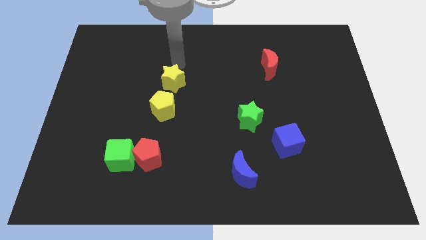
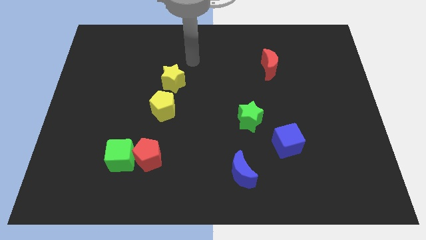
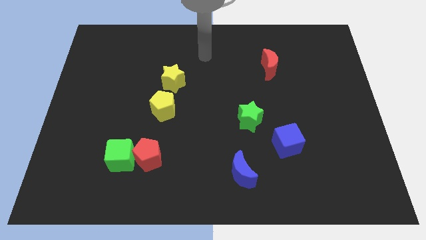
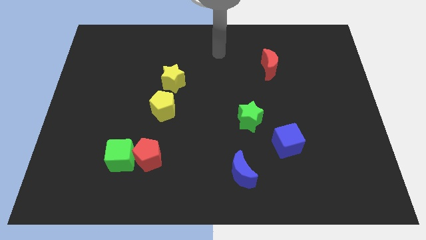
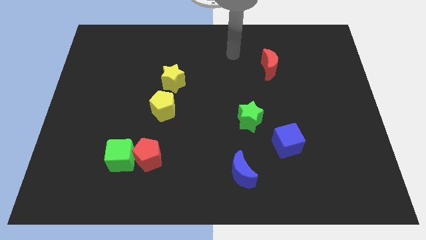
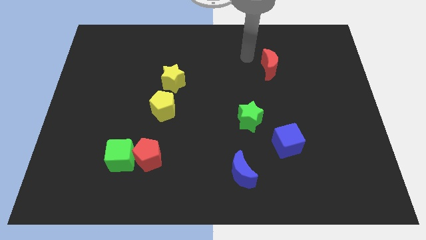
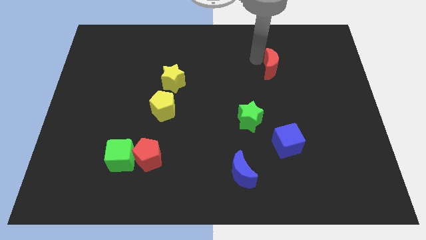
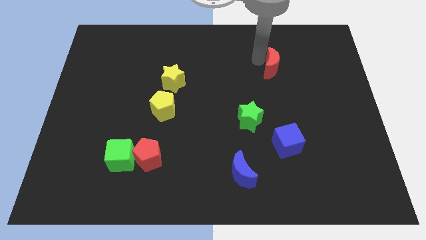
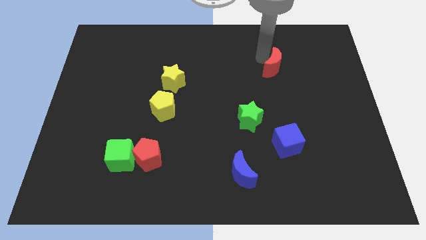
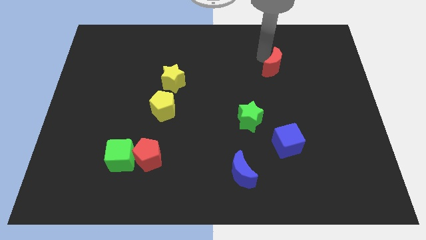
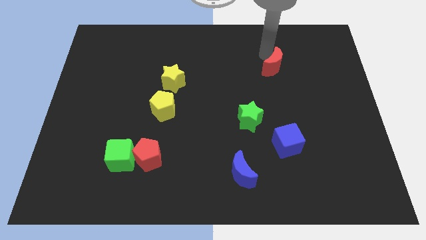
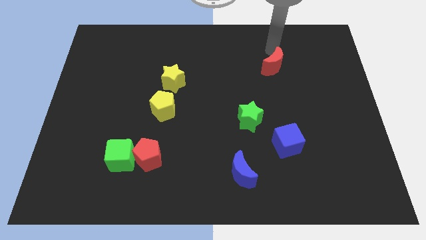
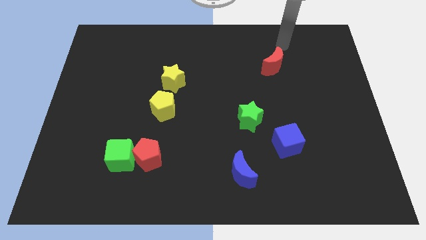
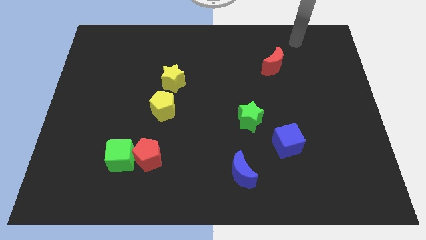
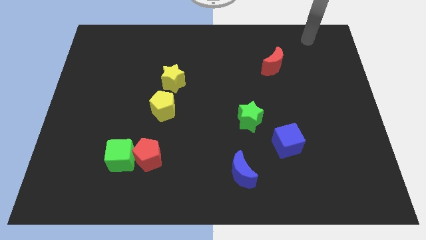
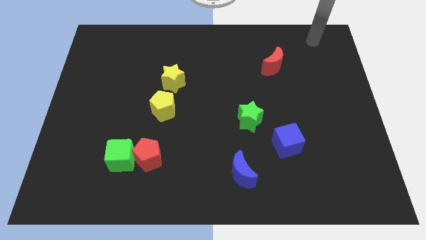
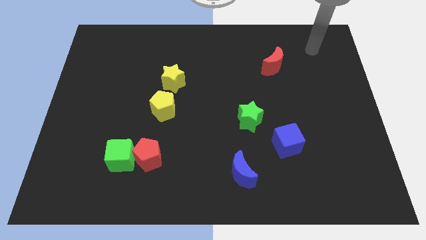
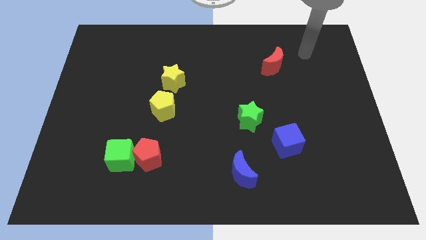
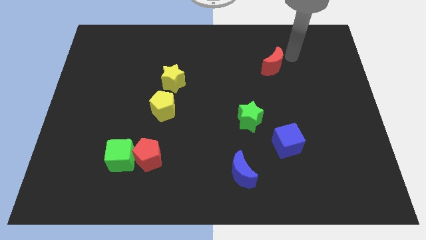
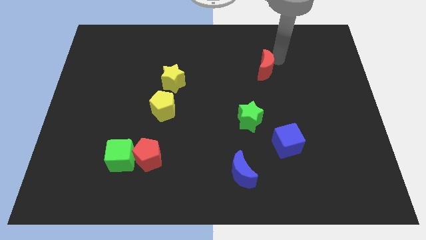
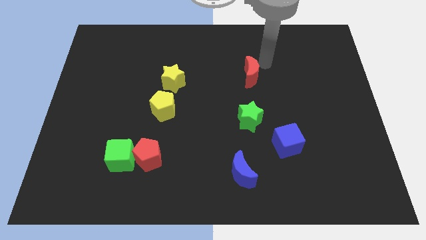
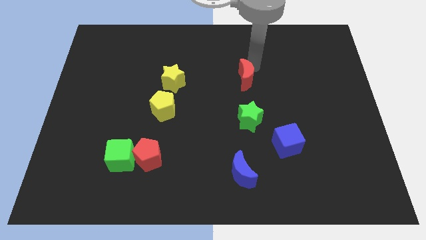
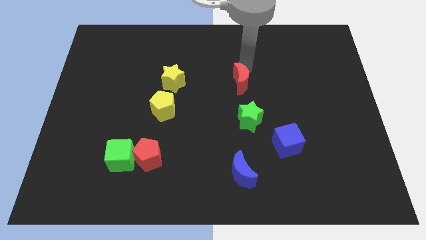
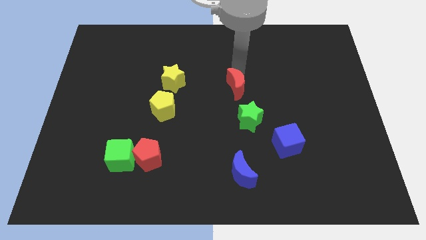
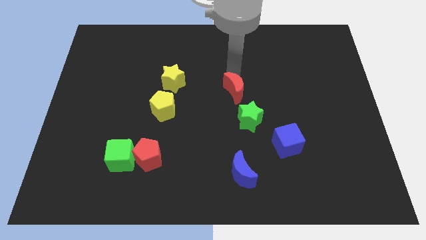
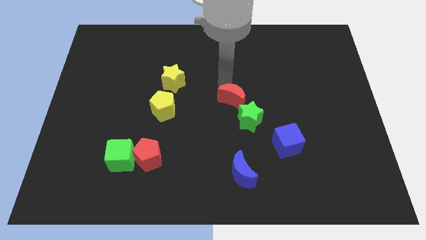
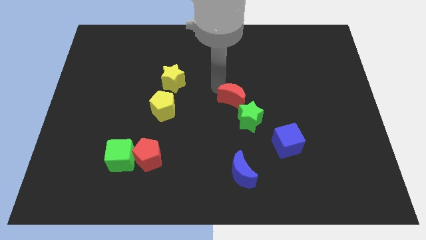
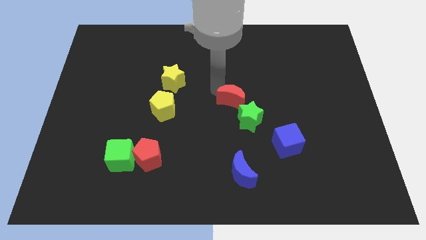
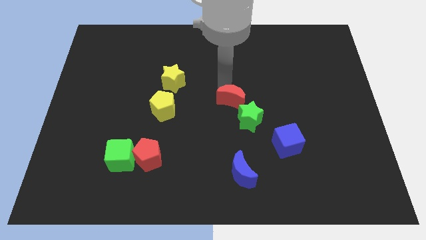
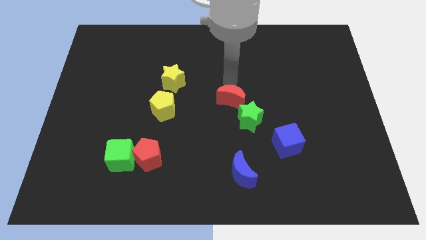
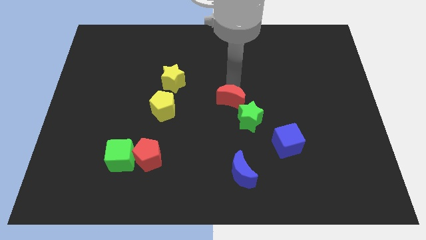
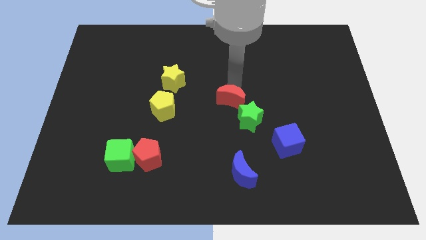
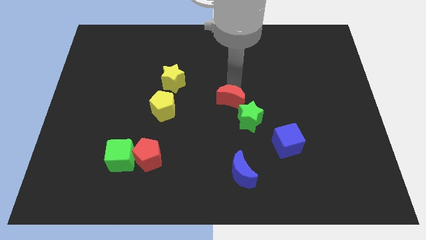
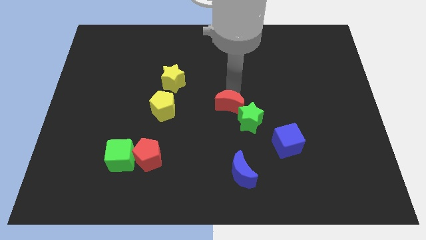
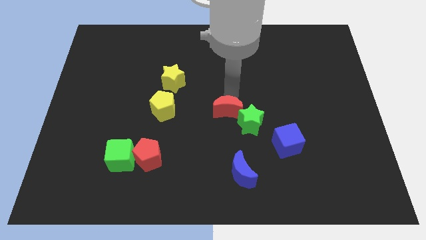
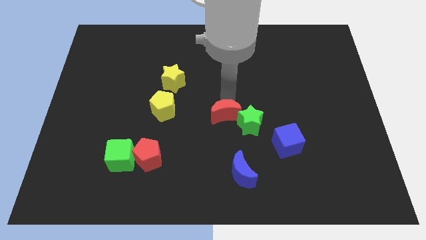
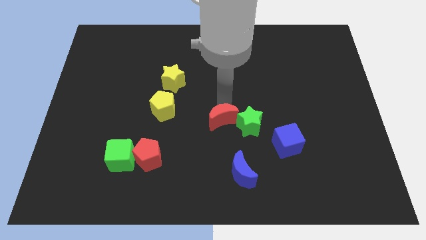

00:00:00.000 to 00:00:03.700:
push the red moon into the green star

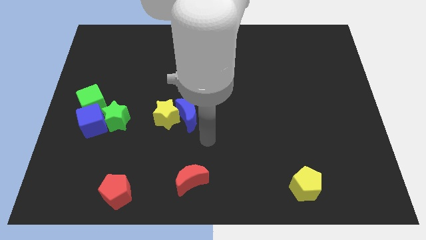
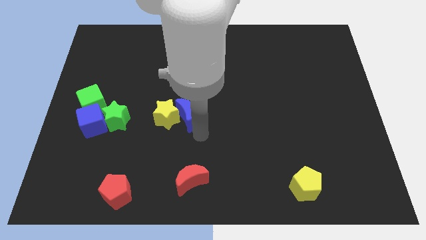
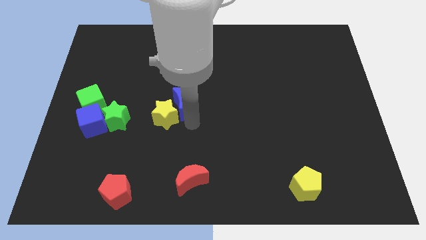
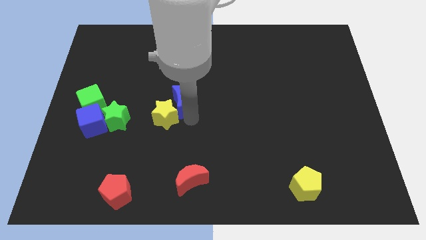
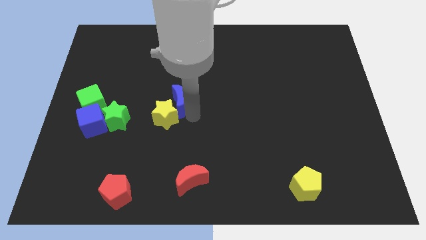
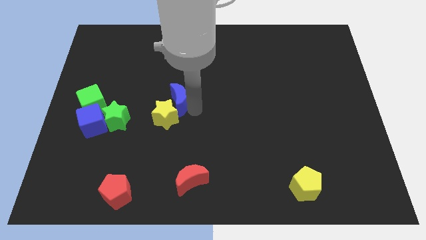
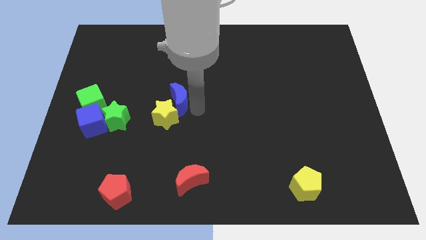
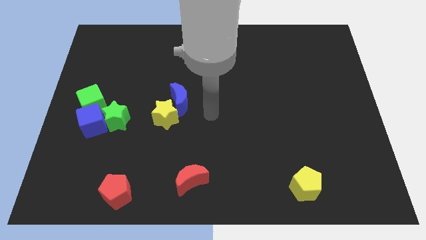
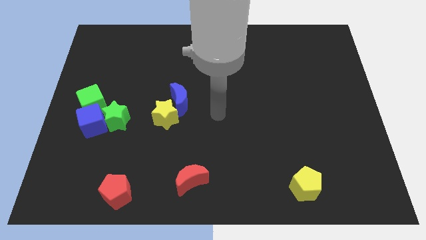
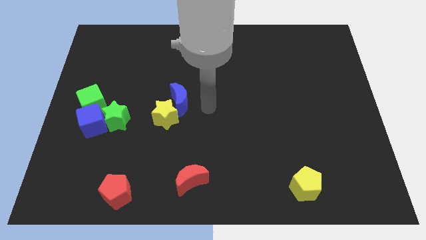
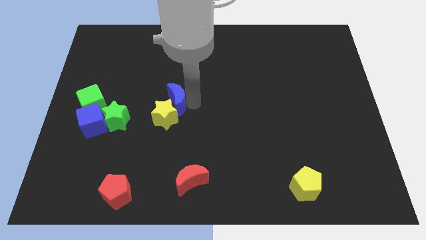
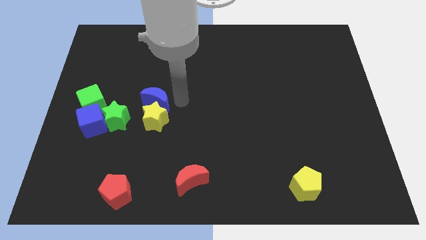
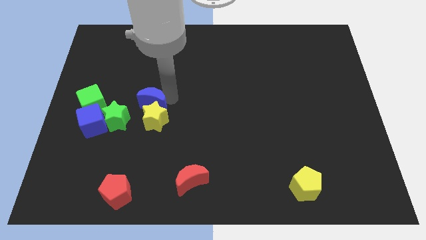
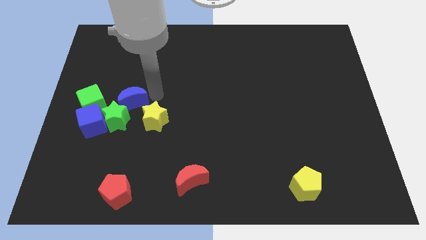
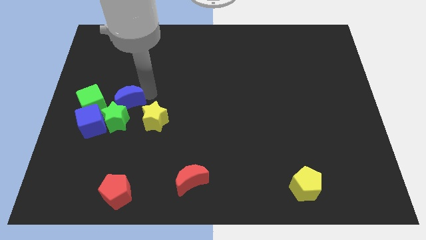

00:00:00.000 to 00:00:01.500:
move the blue crescent into the top of green star

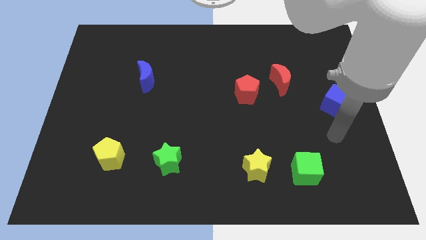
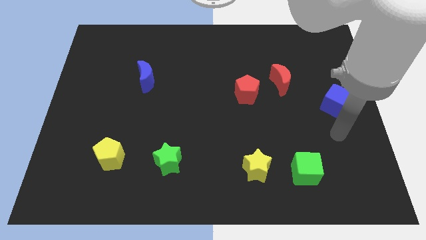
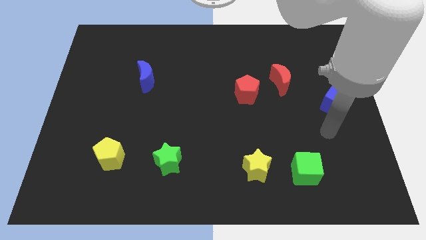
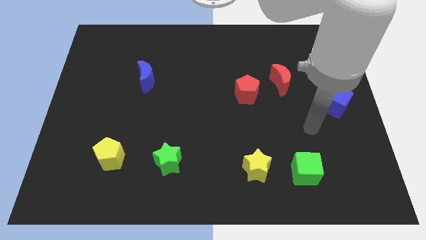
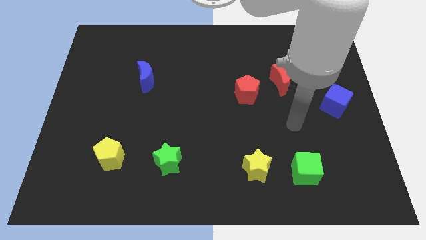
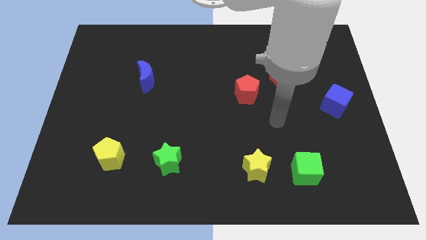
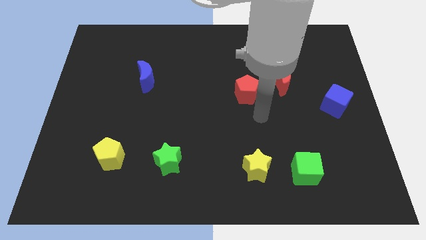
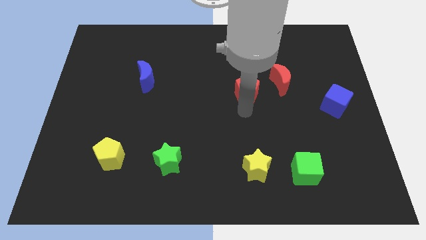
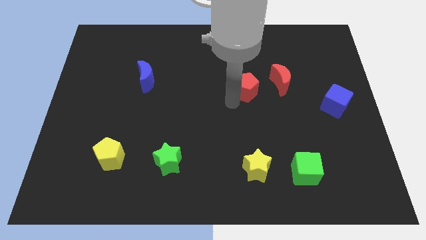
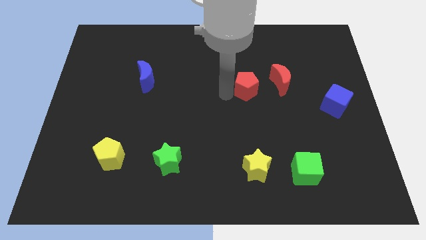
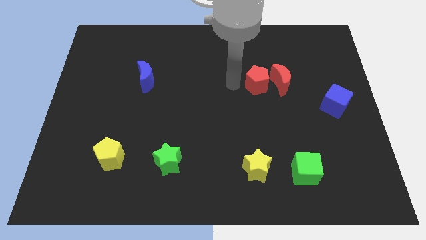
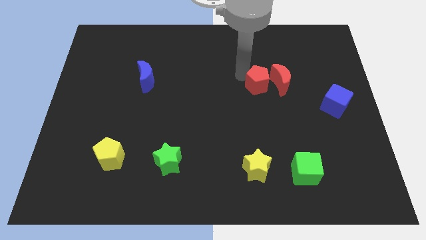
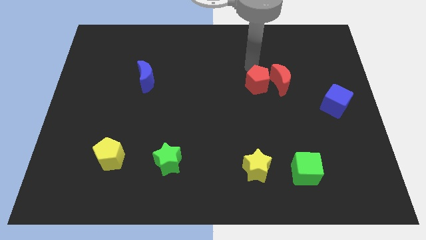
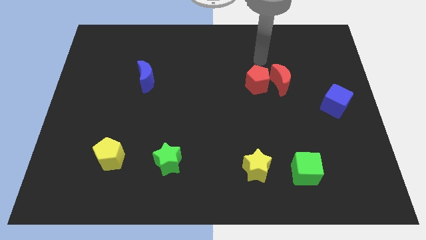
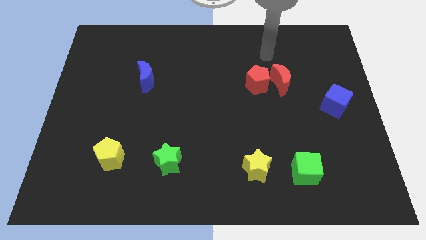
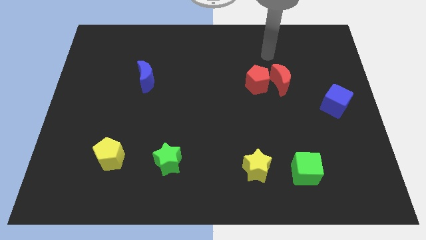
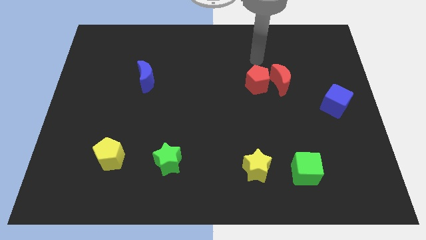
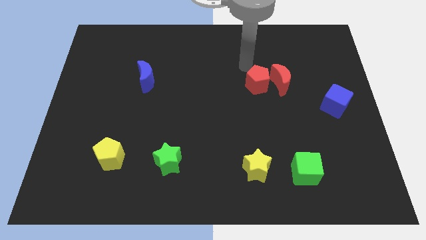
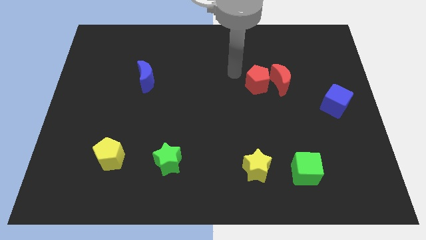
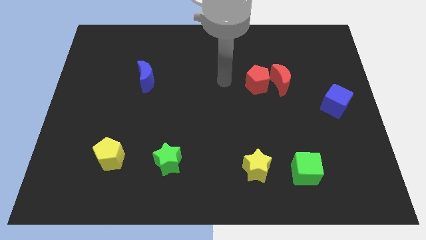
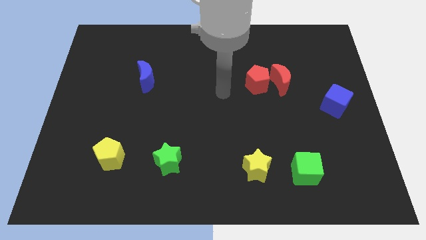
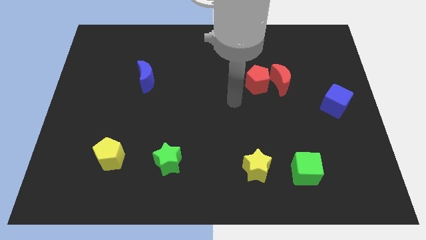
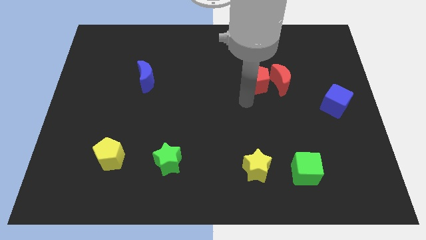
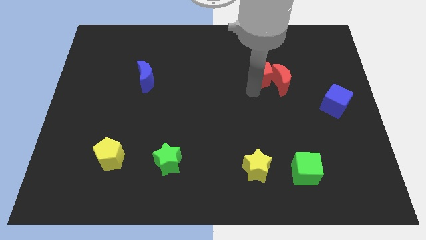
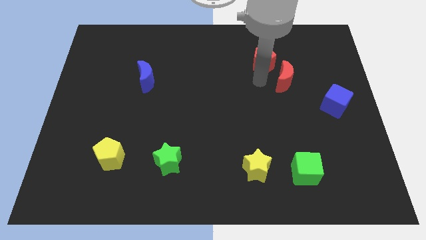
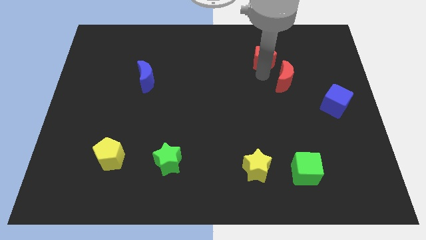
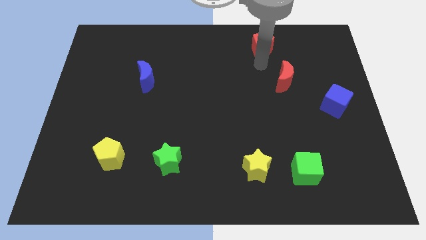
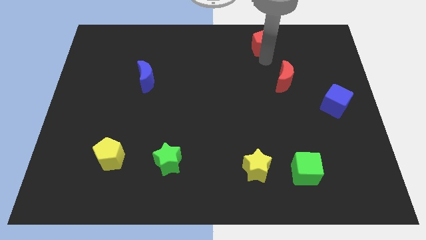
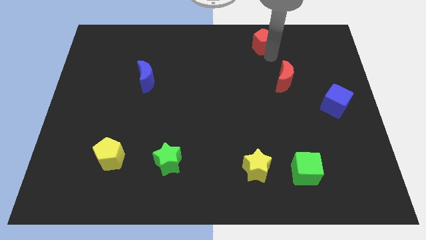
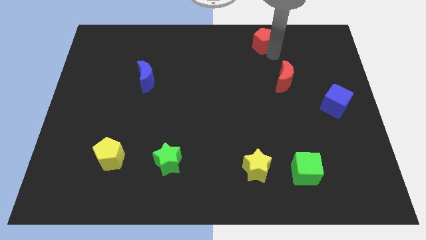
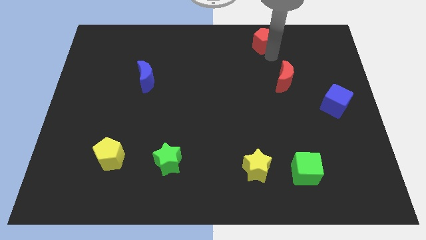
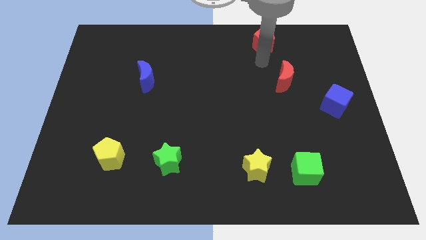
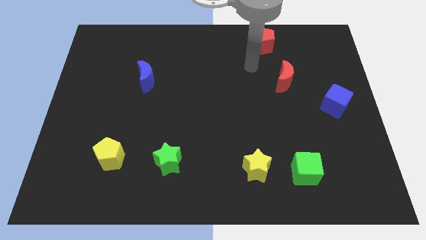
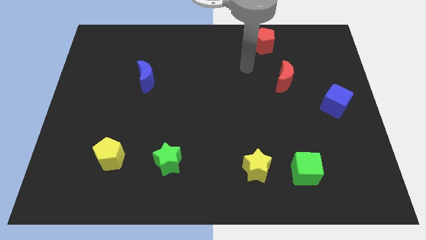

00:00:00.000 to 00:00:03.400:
push the red pentagon to the top right of the board

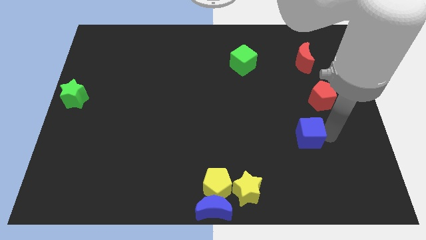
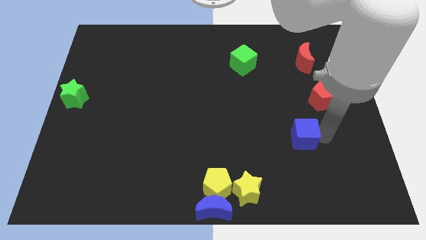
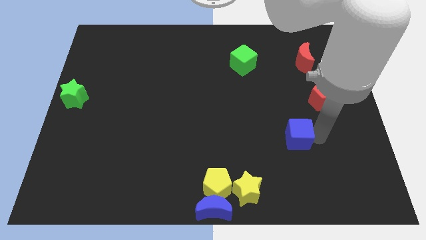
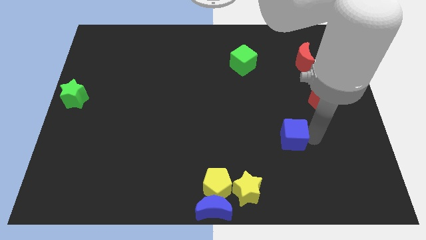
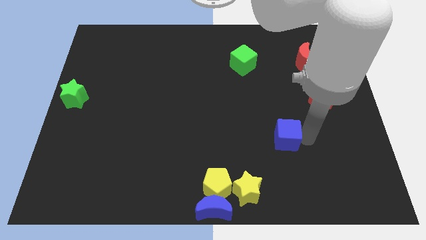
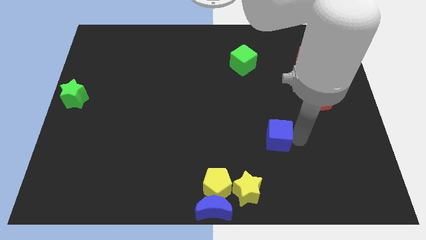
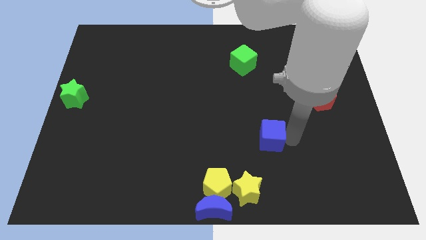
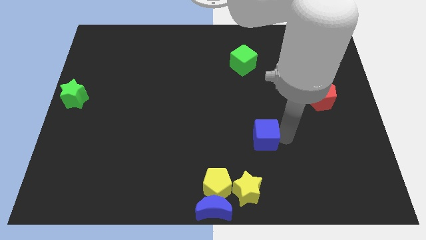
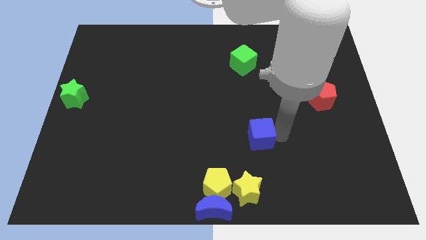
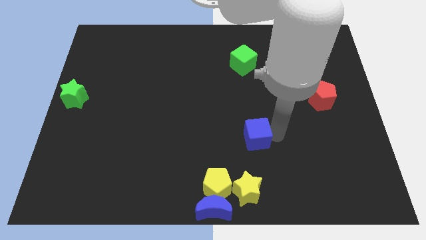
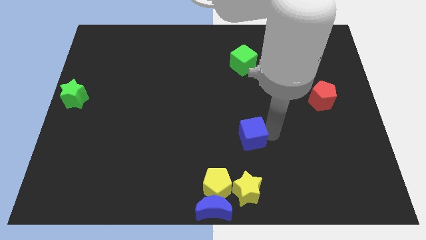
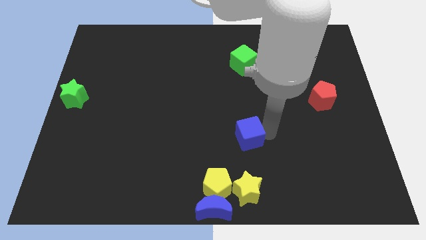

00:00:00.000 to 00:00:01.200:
place the blue cube above the yellow star
